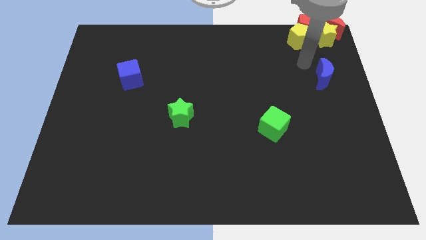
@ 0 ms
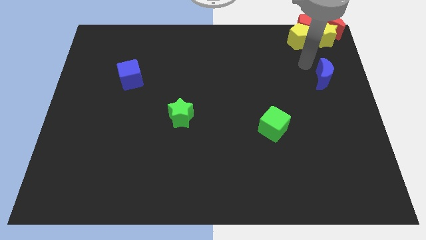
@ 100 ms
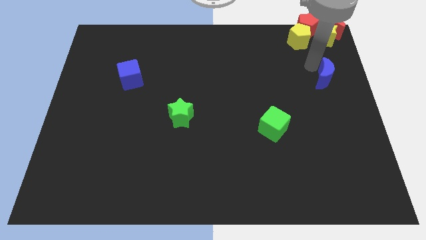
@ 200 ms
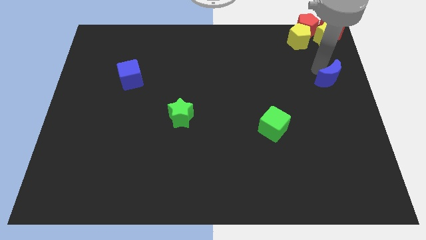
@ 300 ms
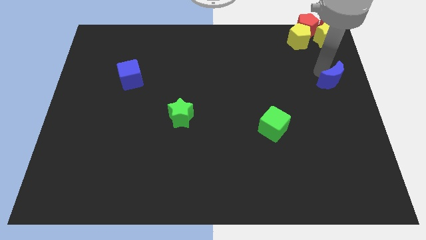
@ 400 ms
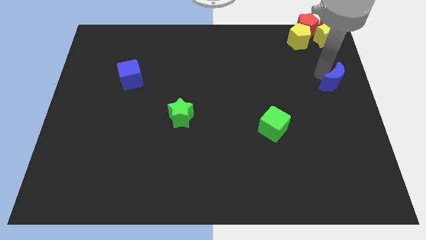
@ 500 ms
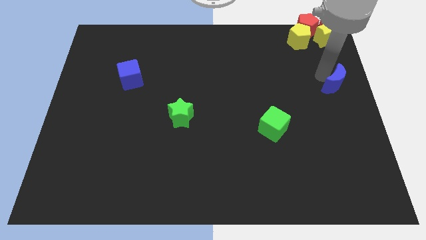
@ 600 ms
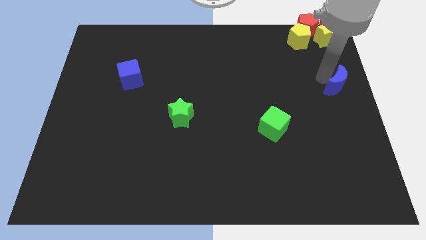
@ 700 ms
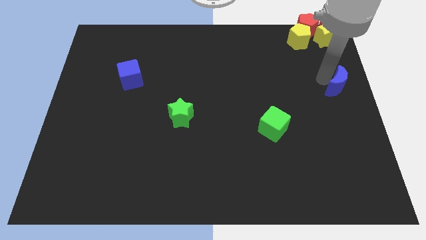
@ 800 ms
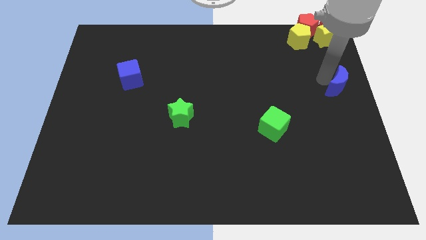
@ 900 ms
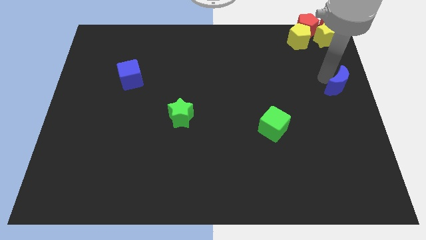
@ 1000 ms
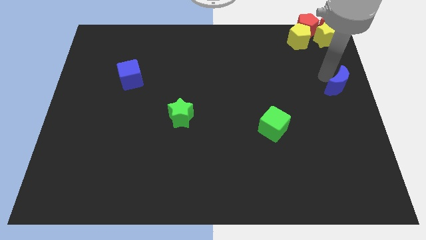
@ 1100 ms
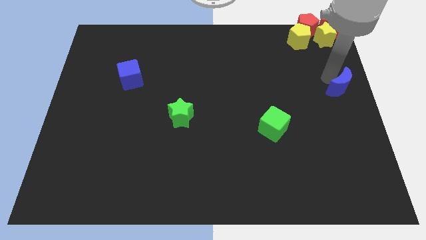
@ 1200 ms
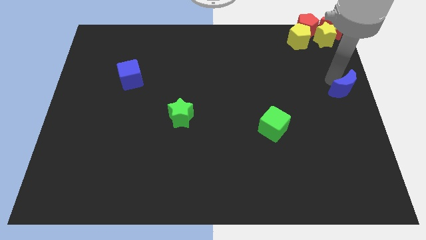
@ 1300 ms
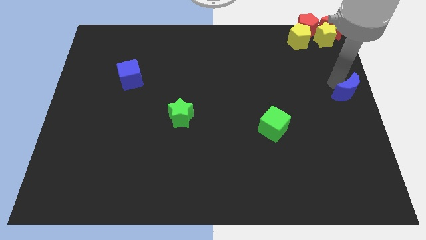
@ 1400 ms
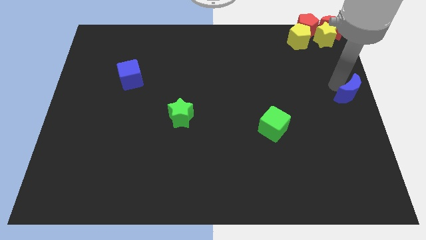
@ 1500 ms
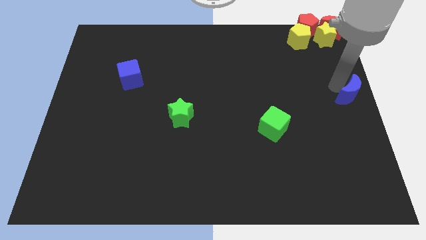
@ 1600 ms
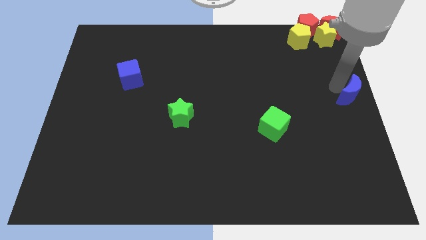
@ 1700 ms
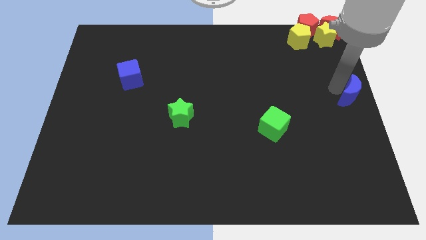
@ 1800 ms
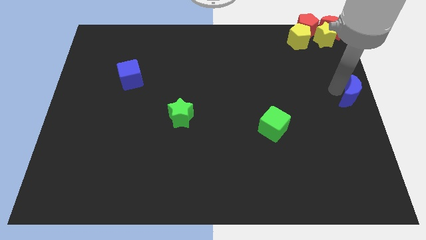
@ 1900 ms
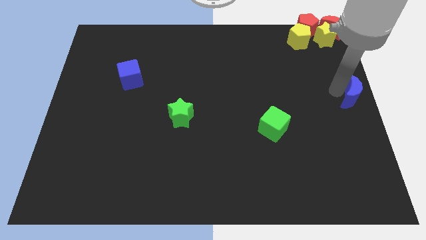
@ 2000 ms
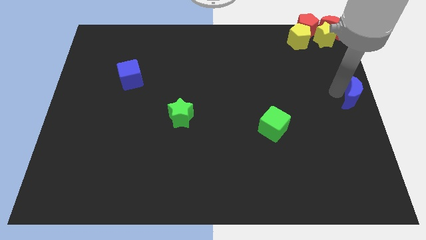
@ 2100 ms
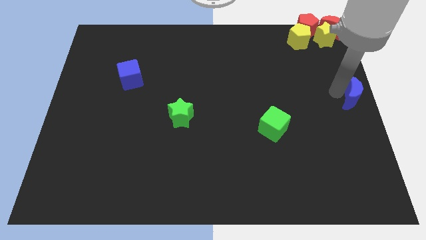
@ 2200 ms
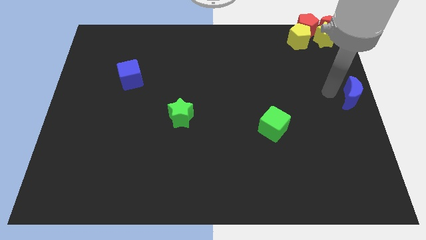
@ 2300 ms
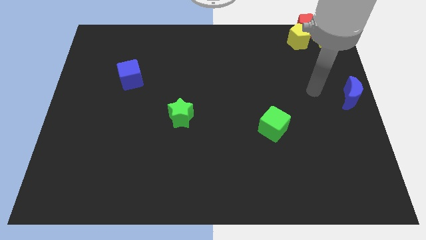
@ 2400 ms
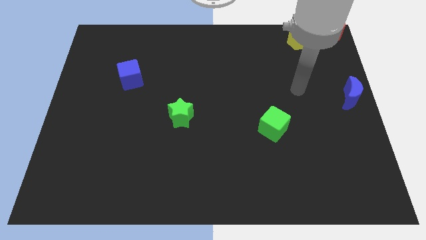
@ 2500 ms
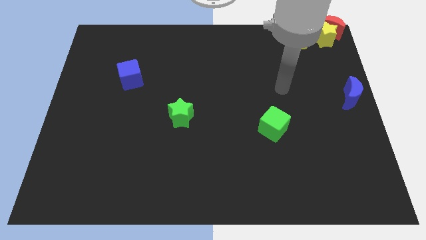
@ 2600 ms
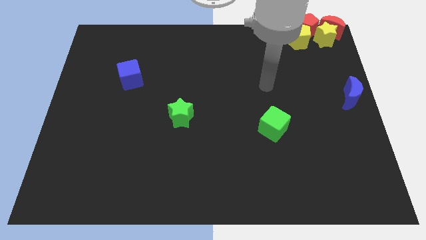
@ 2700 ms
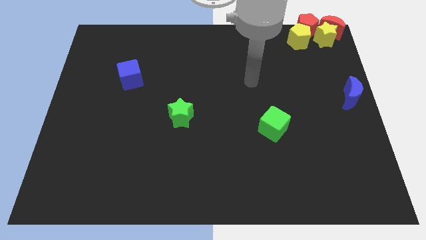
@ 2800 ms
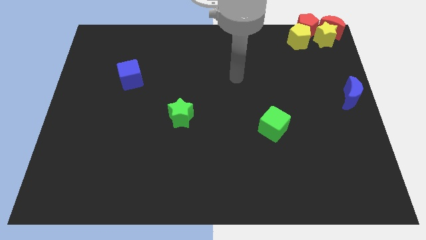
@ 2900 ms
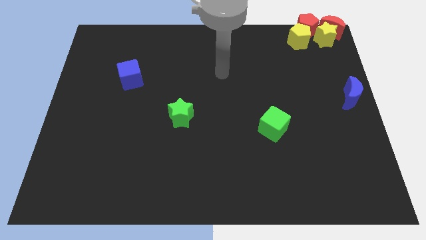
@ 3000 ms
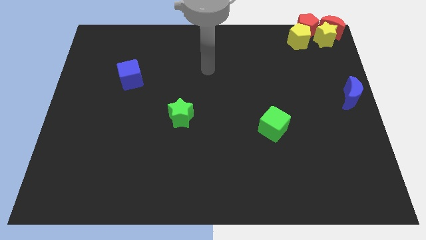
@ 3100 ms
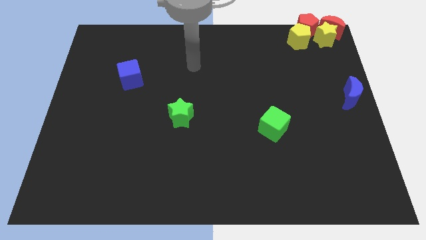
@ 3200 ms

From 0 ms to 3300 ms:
move the blue moon to the center right

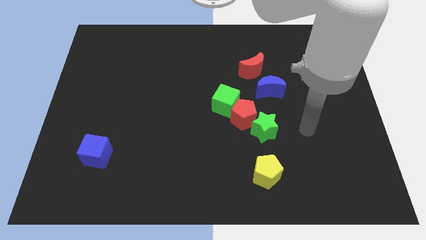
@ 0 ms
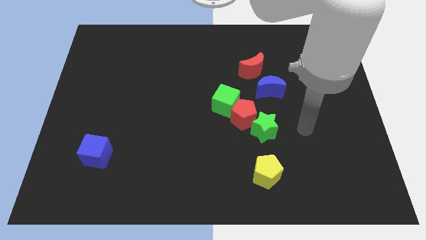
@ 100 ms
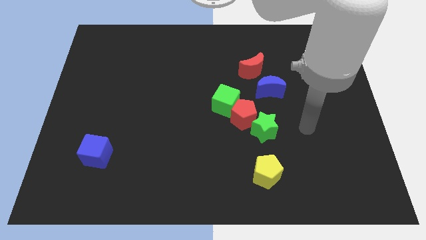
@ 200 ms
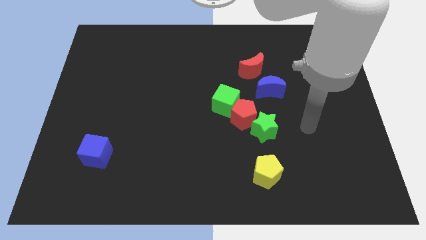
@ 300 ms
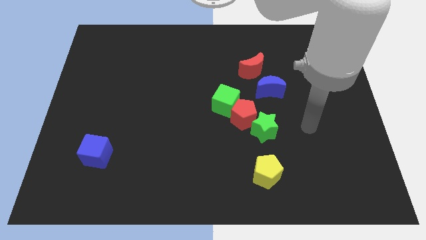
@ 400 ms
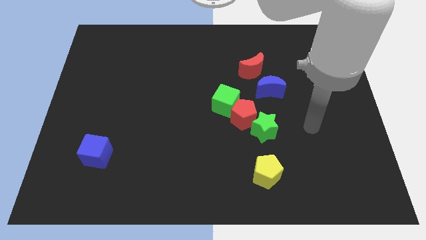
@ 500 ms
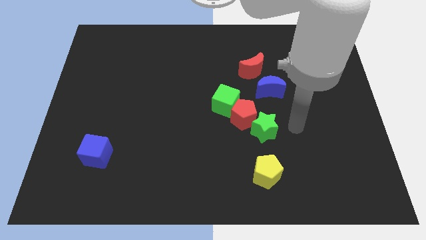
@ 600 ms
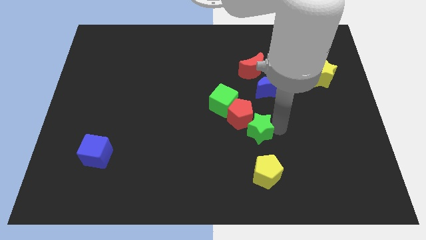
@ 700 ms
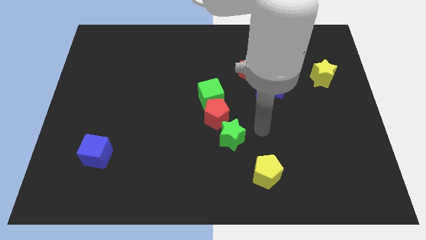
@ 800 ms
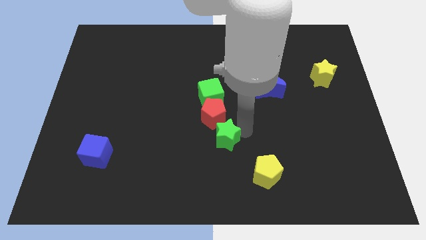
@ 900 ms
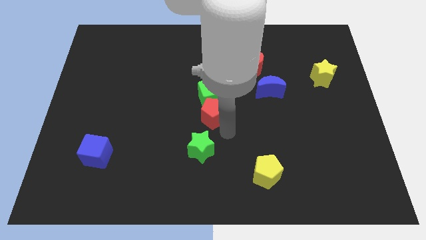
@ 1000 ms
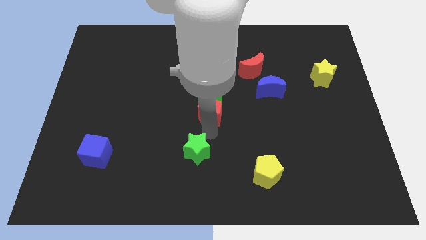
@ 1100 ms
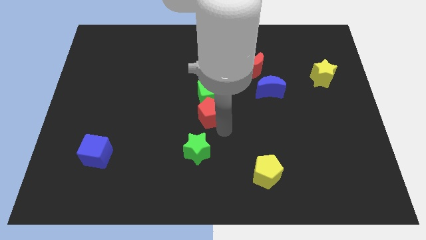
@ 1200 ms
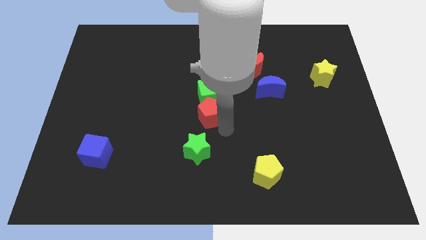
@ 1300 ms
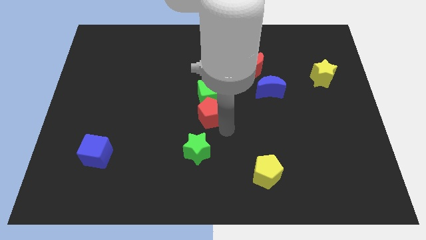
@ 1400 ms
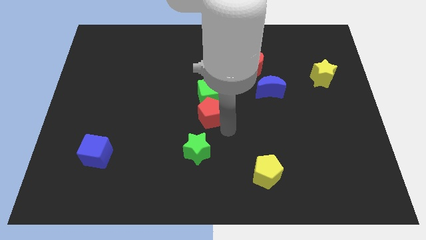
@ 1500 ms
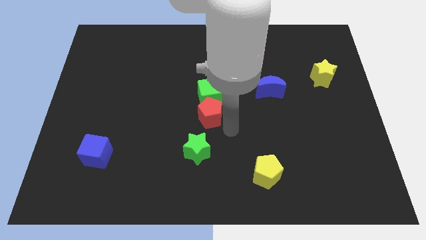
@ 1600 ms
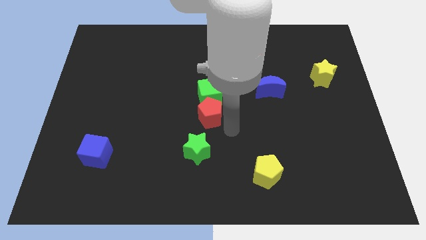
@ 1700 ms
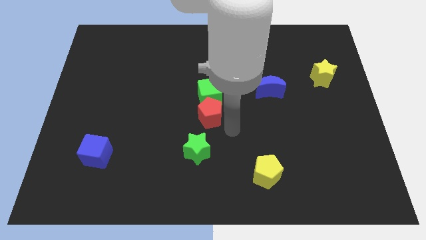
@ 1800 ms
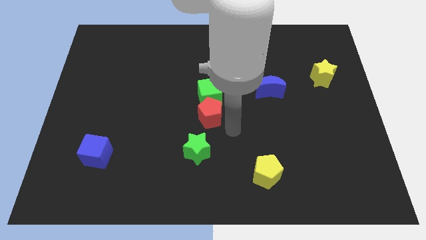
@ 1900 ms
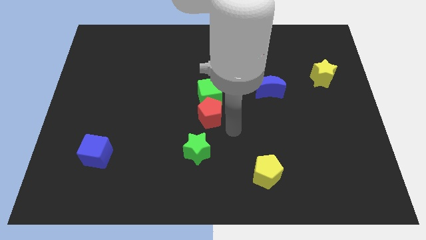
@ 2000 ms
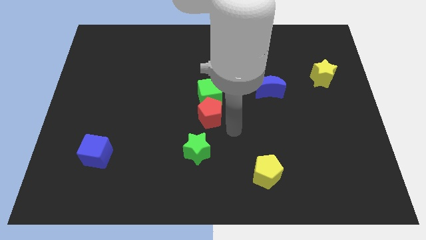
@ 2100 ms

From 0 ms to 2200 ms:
slightly move the green star towards the left

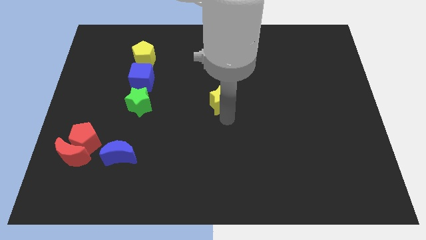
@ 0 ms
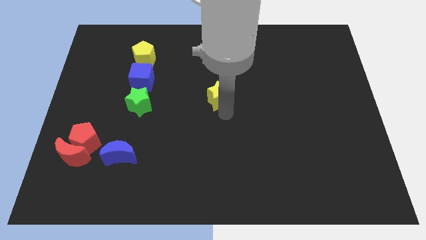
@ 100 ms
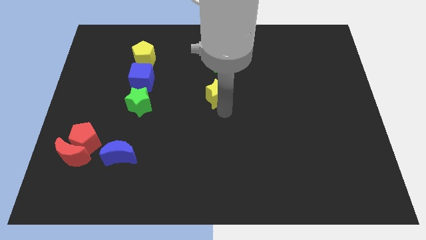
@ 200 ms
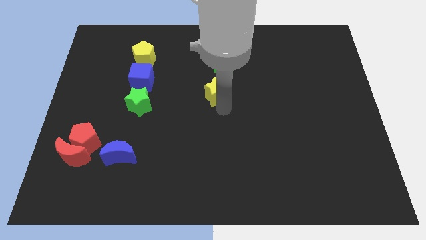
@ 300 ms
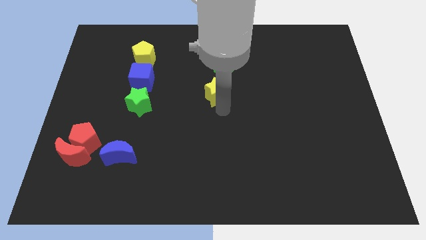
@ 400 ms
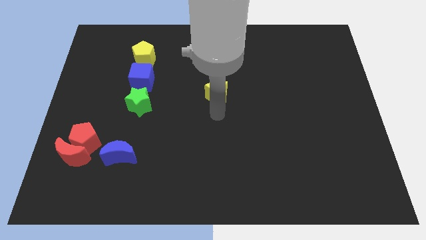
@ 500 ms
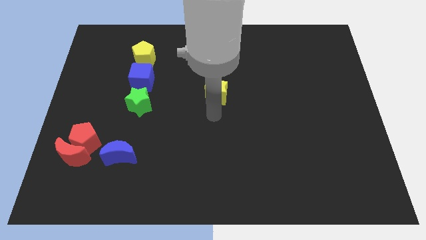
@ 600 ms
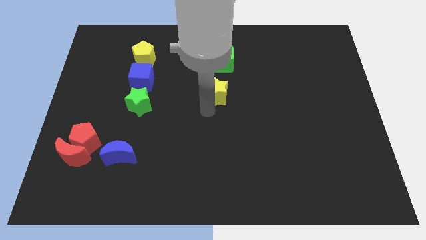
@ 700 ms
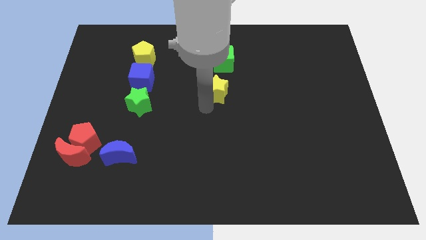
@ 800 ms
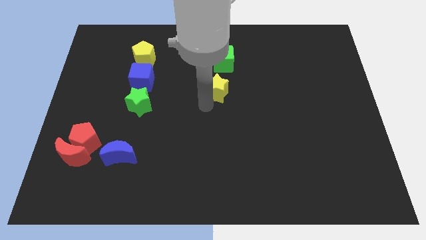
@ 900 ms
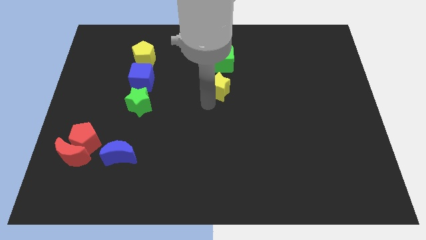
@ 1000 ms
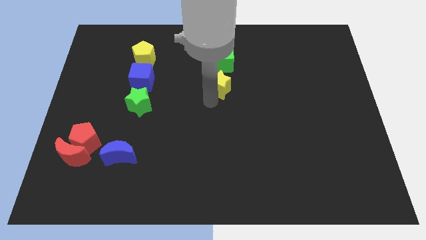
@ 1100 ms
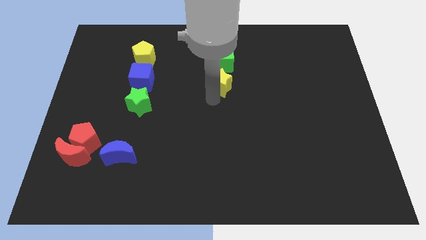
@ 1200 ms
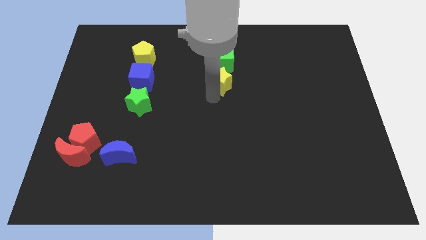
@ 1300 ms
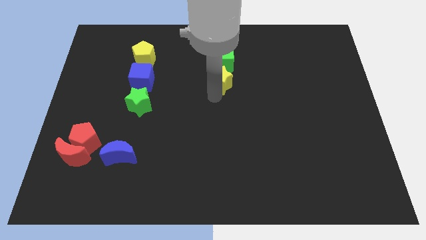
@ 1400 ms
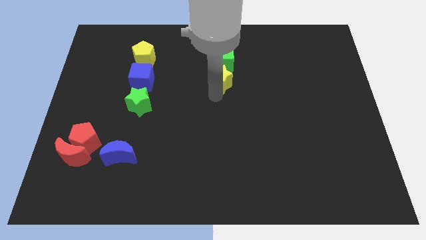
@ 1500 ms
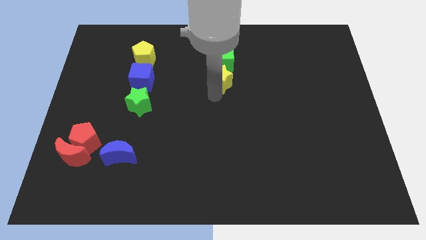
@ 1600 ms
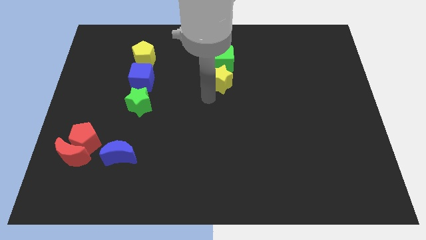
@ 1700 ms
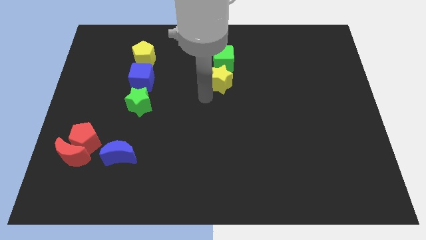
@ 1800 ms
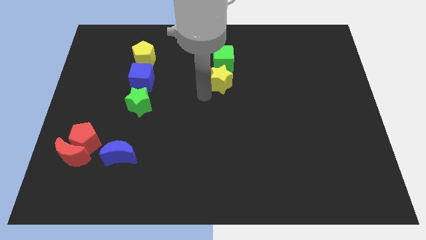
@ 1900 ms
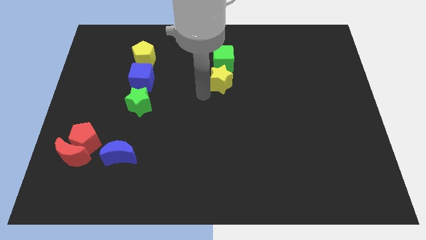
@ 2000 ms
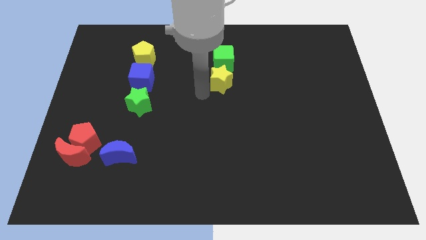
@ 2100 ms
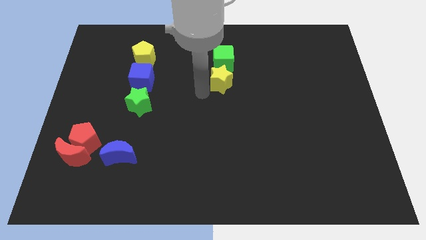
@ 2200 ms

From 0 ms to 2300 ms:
slightly push the yellow star towards top

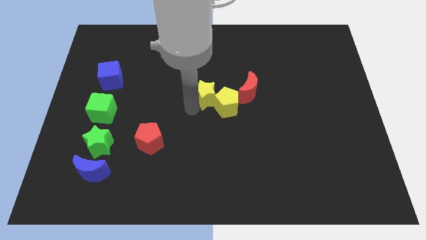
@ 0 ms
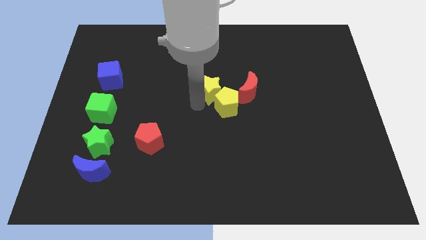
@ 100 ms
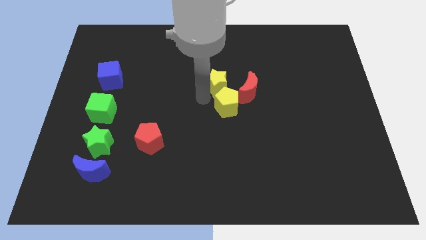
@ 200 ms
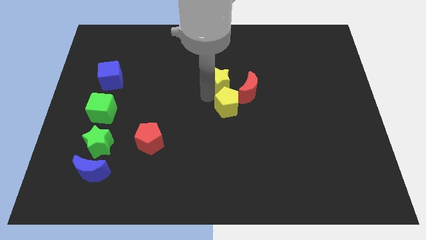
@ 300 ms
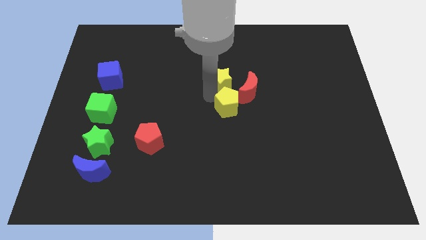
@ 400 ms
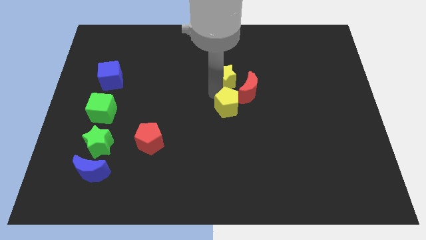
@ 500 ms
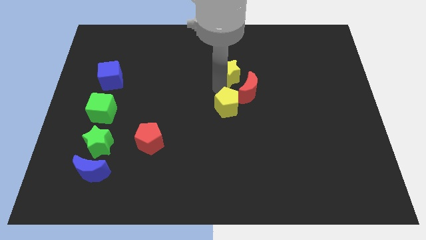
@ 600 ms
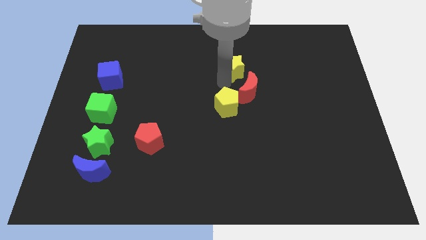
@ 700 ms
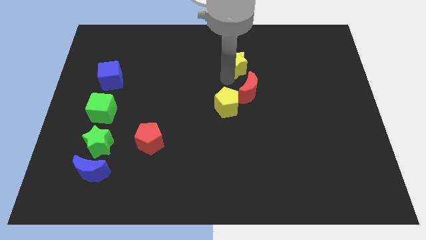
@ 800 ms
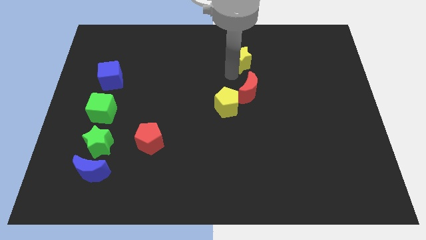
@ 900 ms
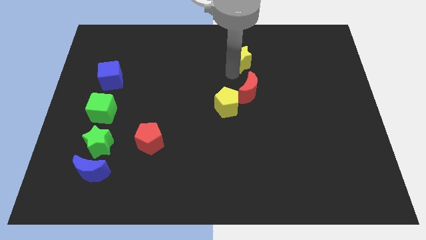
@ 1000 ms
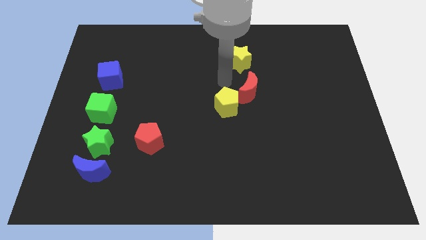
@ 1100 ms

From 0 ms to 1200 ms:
separate yellow star from yellow pentagon
